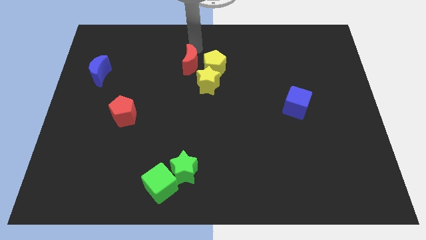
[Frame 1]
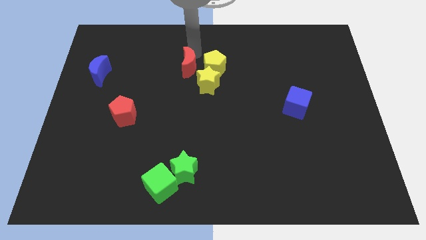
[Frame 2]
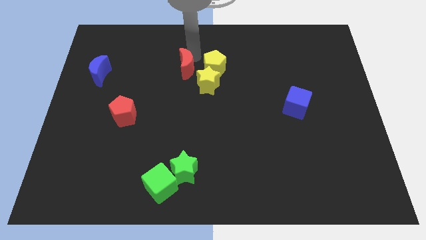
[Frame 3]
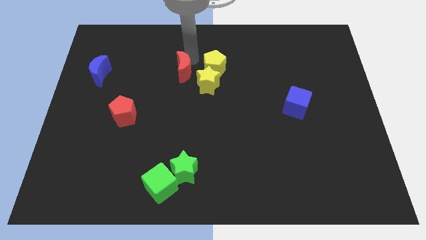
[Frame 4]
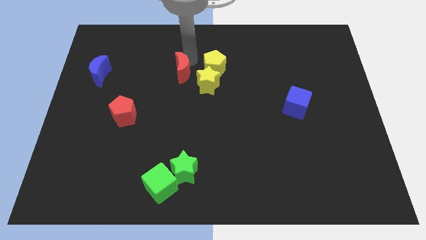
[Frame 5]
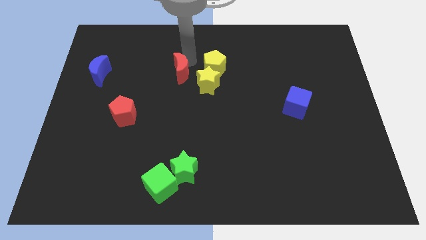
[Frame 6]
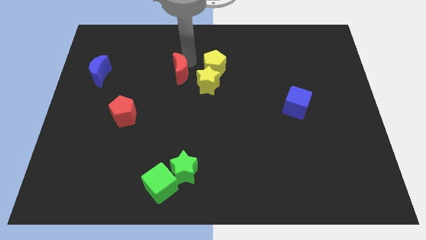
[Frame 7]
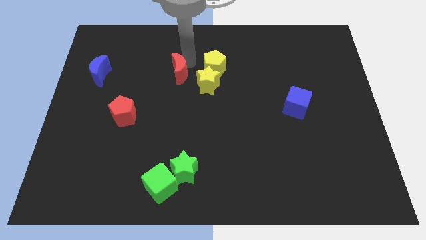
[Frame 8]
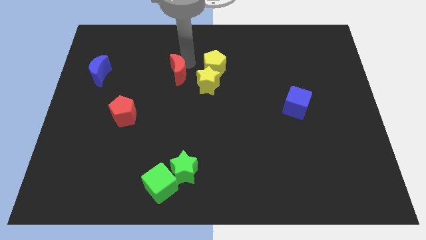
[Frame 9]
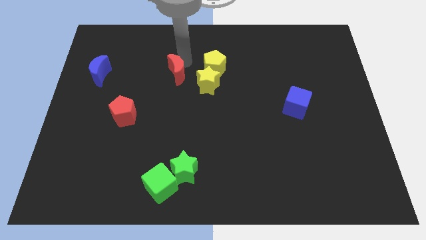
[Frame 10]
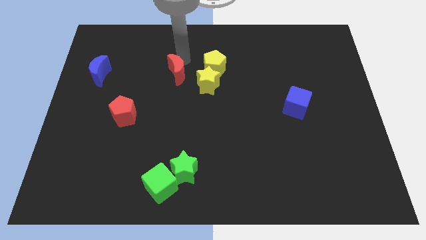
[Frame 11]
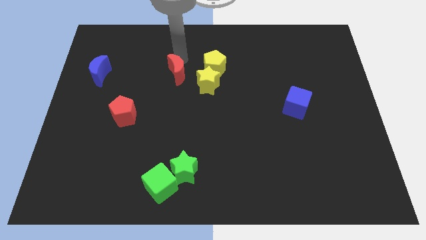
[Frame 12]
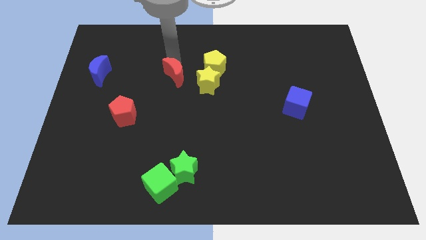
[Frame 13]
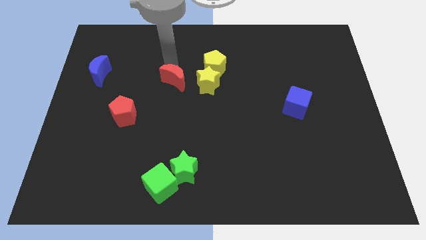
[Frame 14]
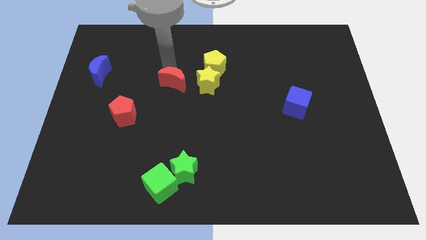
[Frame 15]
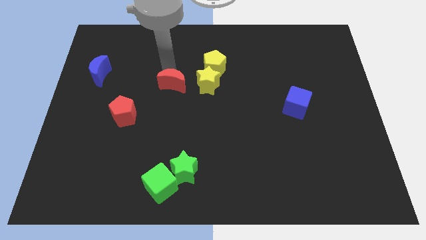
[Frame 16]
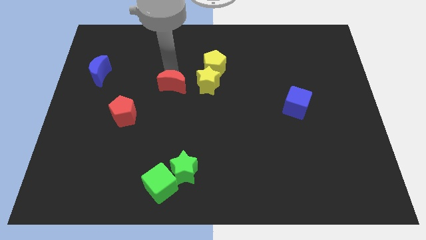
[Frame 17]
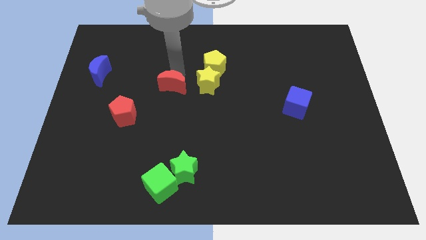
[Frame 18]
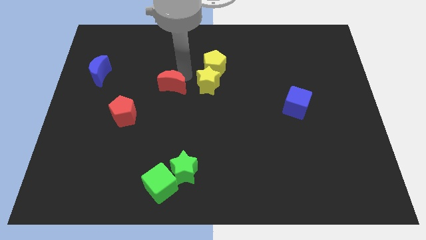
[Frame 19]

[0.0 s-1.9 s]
push the red moon closer to the red pentagon

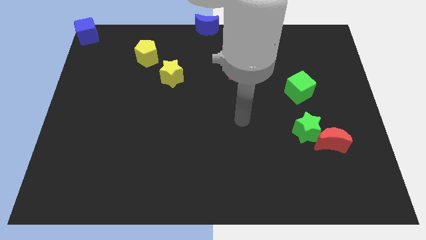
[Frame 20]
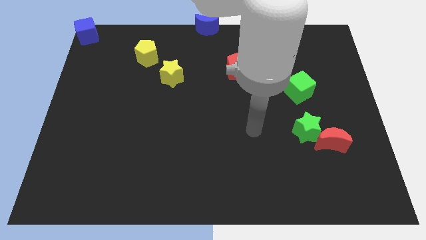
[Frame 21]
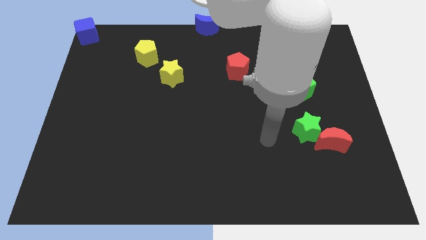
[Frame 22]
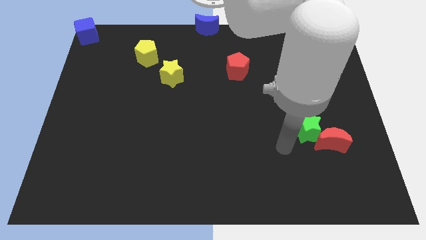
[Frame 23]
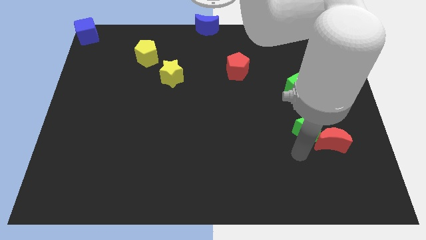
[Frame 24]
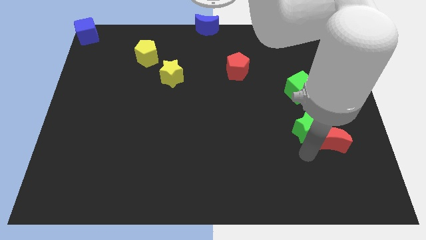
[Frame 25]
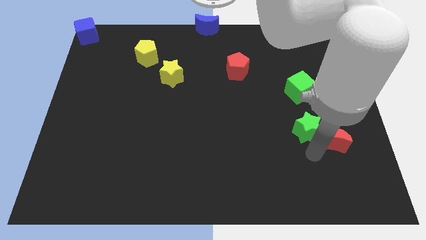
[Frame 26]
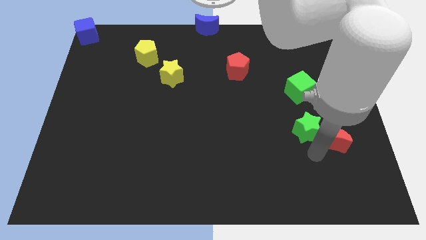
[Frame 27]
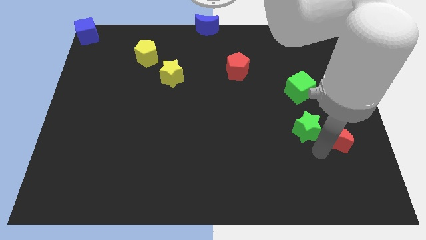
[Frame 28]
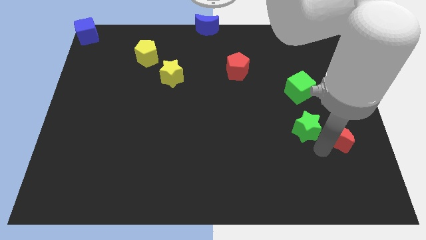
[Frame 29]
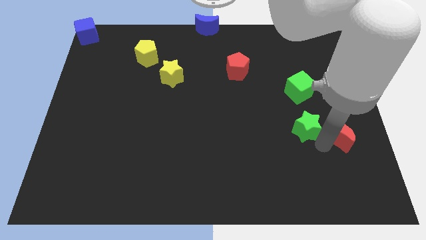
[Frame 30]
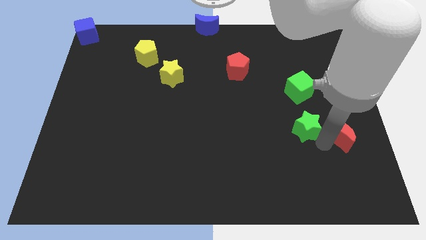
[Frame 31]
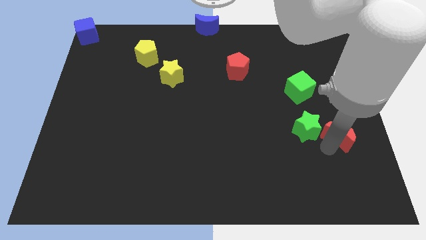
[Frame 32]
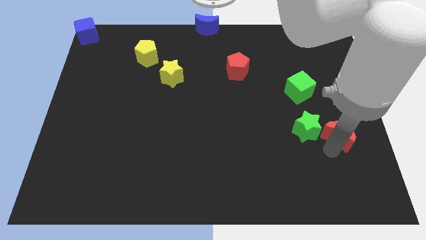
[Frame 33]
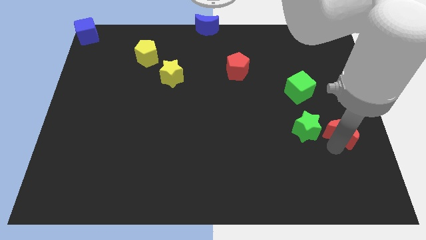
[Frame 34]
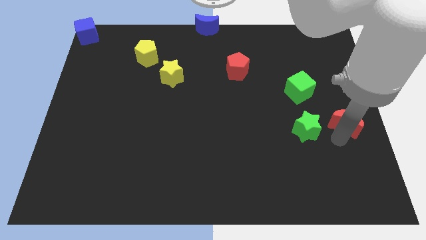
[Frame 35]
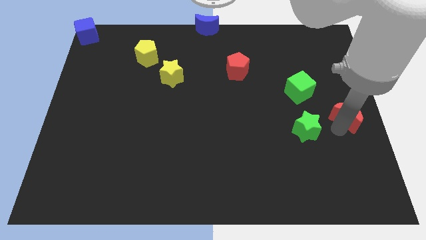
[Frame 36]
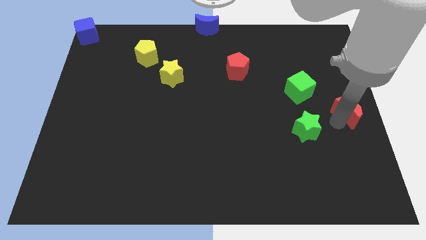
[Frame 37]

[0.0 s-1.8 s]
separate the red crescent from the green star

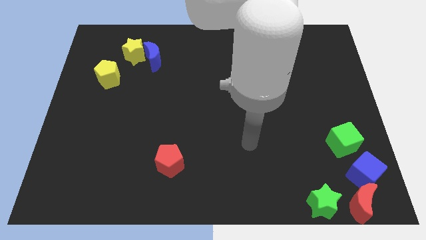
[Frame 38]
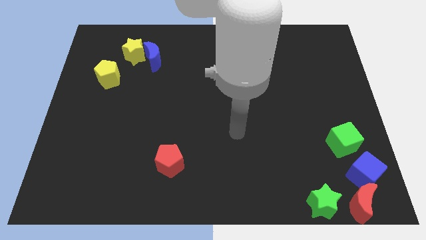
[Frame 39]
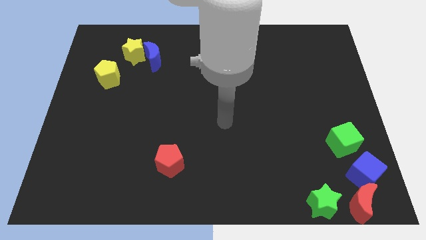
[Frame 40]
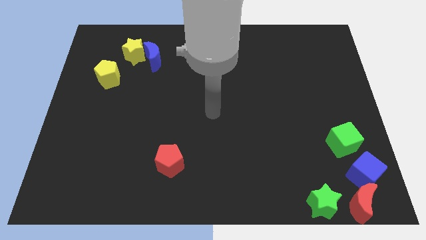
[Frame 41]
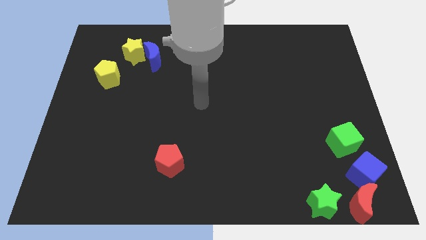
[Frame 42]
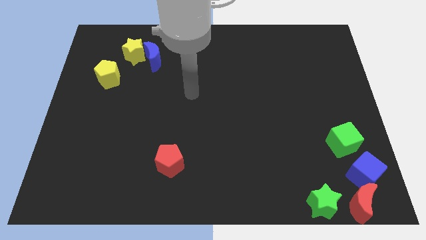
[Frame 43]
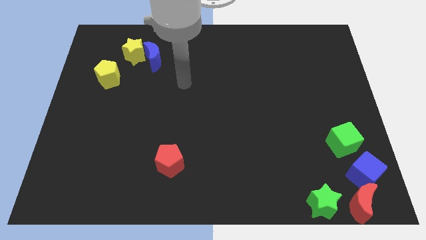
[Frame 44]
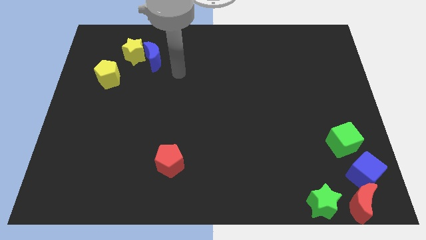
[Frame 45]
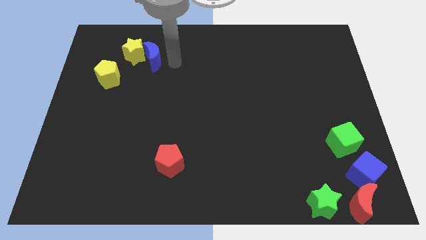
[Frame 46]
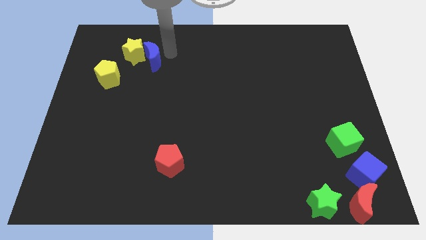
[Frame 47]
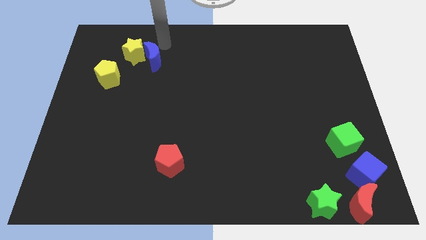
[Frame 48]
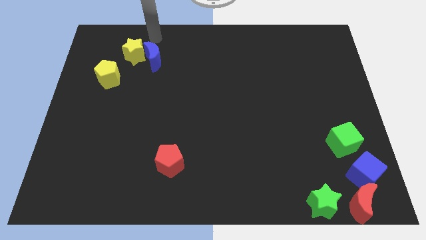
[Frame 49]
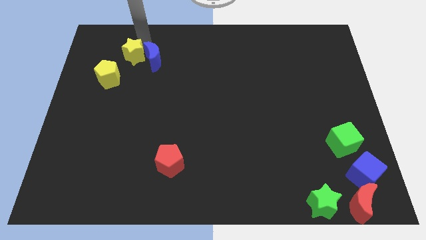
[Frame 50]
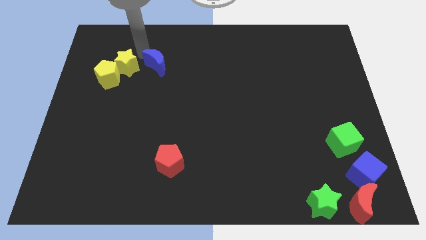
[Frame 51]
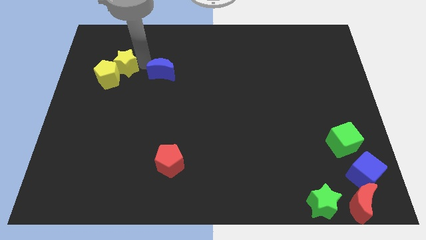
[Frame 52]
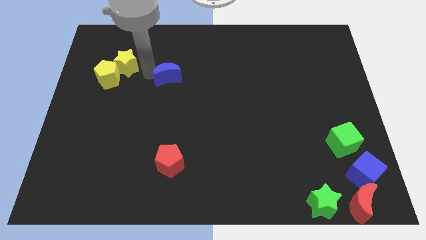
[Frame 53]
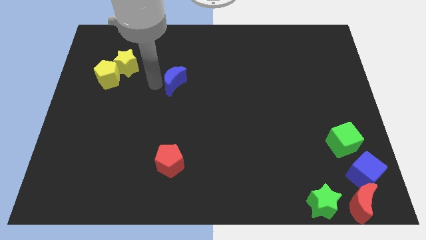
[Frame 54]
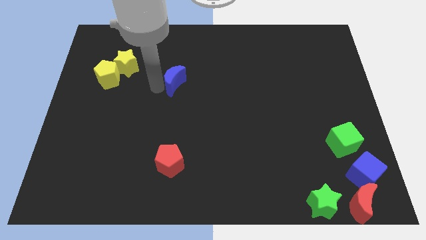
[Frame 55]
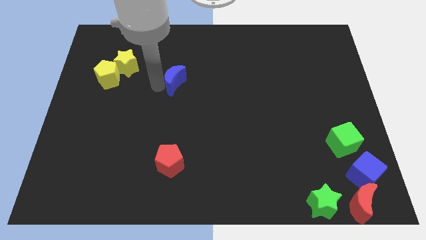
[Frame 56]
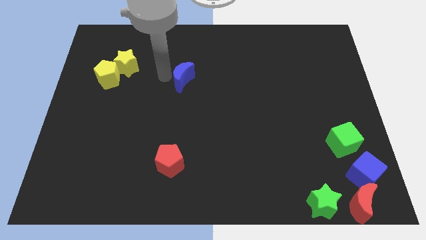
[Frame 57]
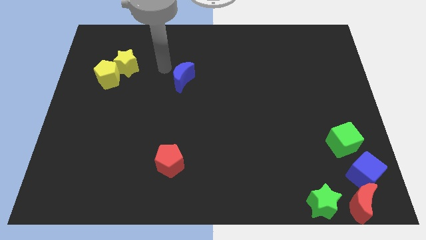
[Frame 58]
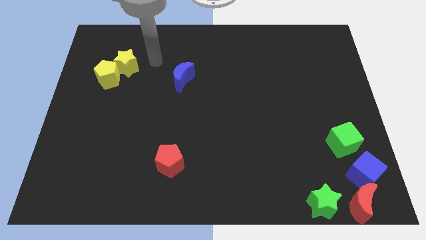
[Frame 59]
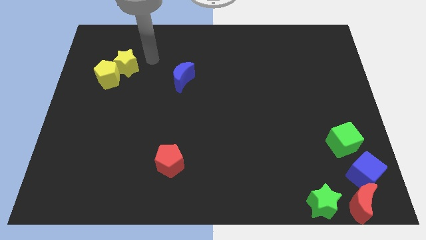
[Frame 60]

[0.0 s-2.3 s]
separate the yellow star and the blue moon

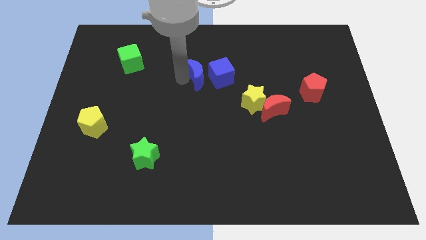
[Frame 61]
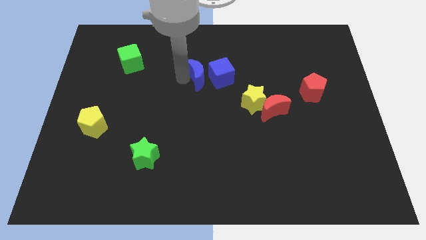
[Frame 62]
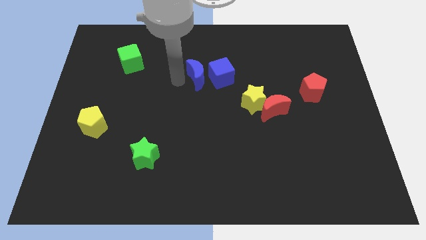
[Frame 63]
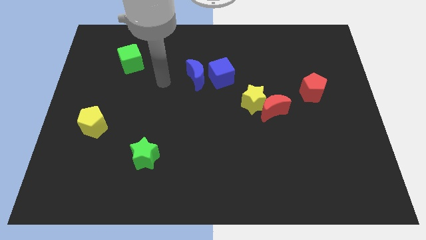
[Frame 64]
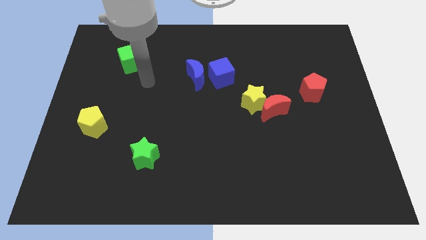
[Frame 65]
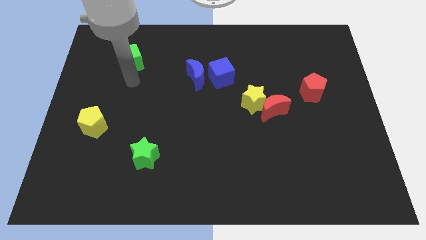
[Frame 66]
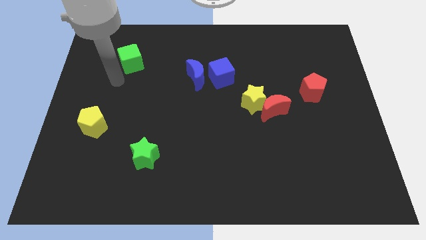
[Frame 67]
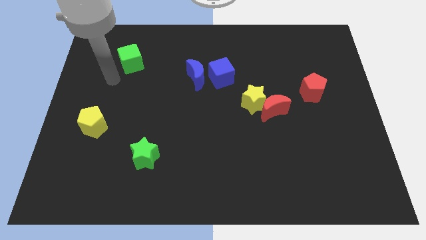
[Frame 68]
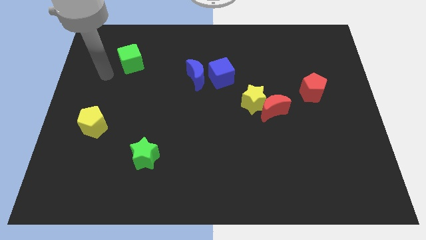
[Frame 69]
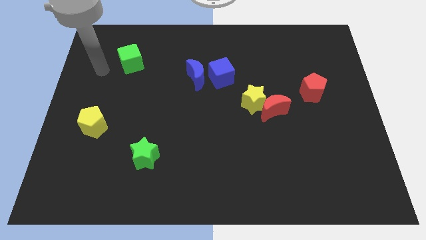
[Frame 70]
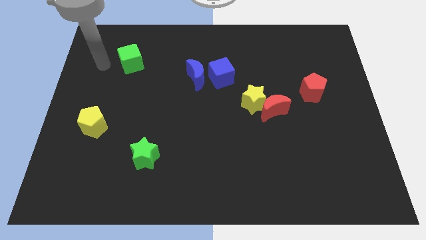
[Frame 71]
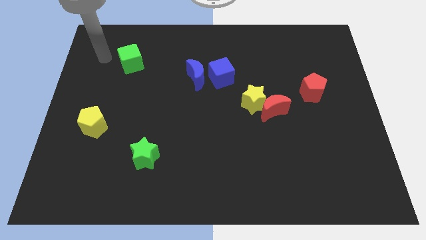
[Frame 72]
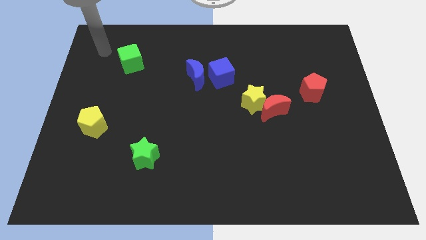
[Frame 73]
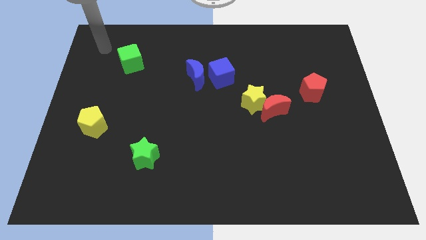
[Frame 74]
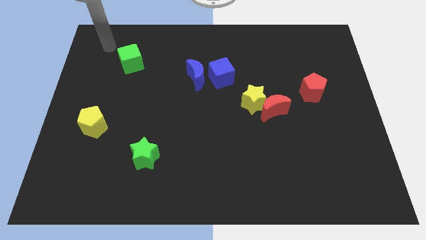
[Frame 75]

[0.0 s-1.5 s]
move your arm away from the blue moon

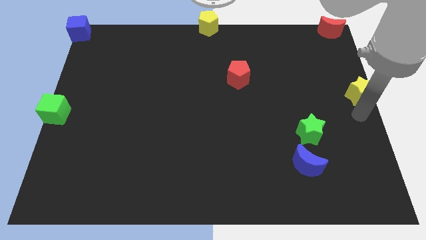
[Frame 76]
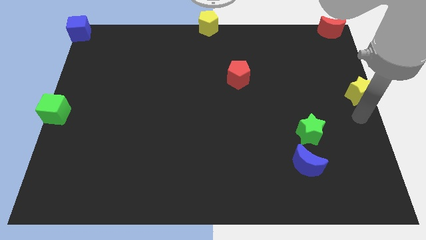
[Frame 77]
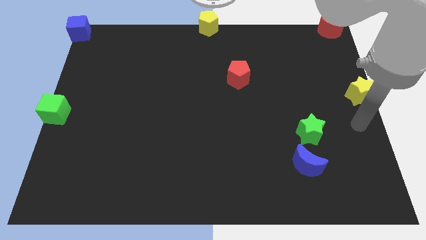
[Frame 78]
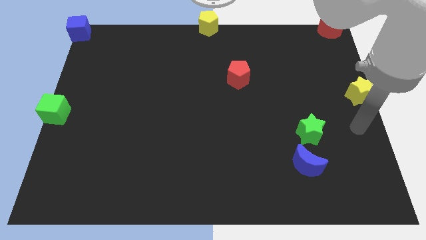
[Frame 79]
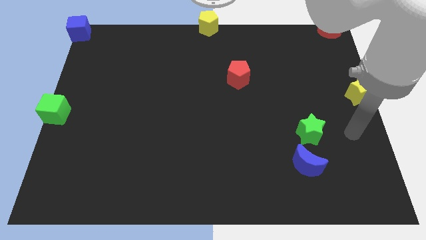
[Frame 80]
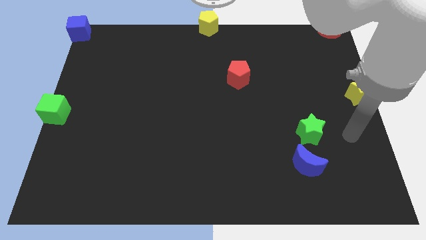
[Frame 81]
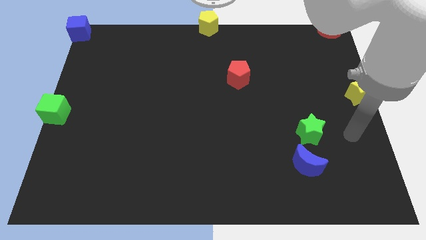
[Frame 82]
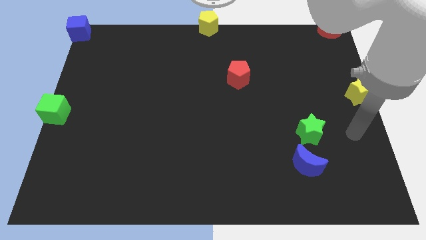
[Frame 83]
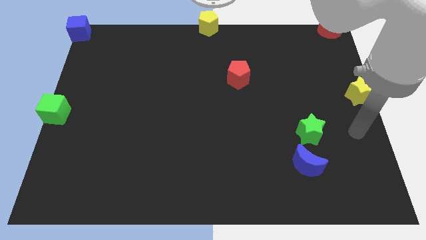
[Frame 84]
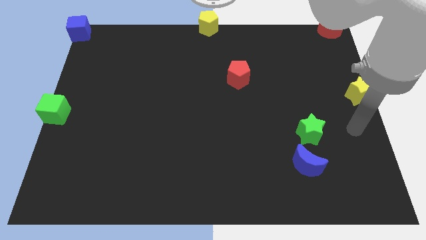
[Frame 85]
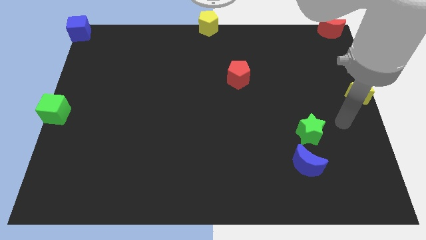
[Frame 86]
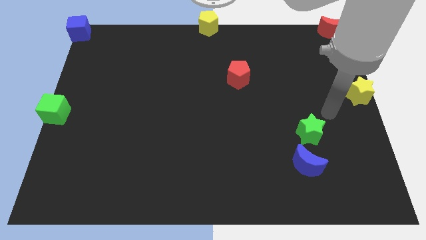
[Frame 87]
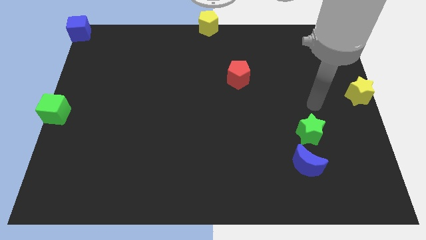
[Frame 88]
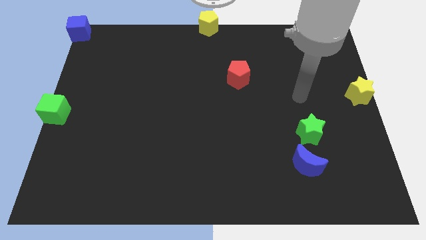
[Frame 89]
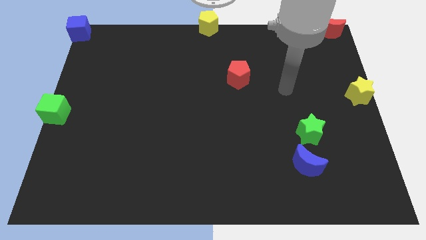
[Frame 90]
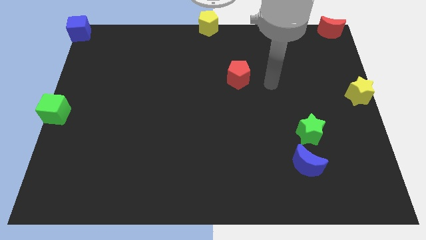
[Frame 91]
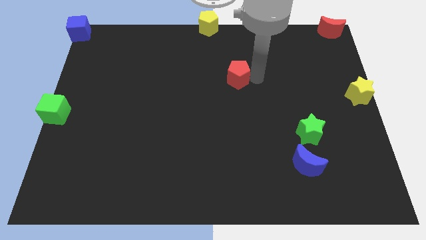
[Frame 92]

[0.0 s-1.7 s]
move the arm right to the red pentagon
